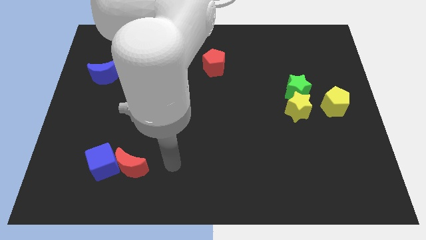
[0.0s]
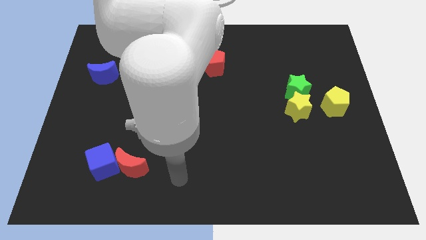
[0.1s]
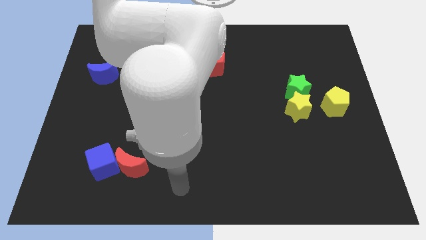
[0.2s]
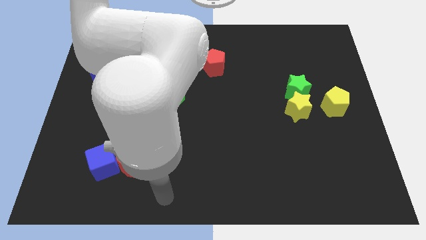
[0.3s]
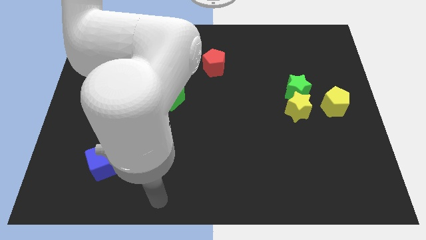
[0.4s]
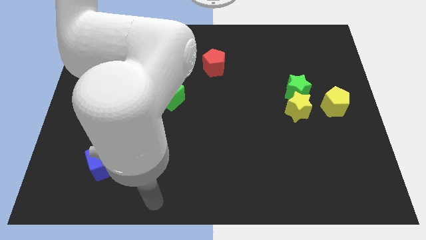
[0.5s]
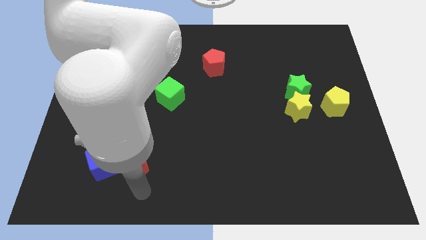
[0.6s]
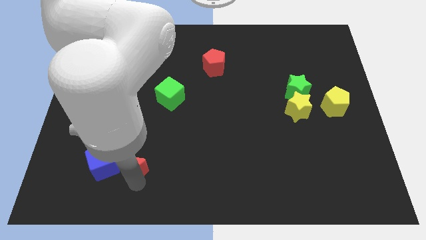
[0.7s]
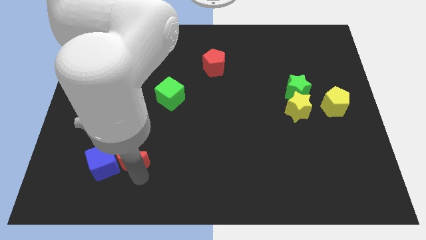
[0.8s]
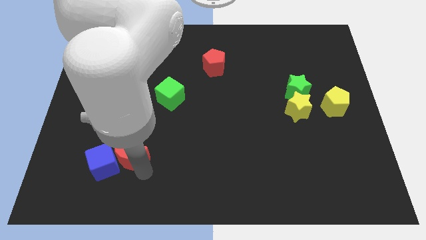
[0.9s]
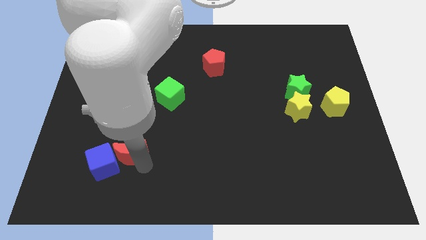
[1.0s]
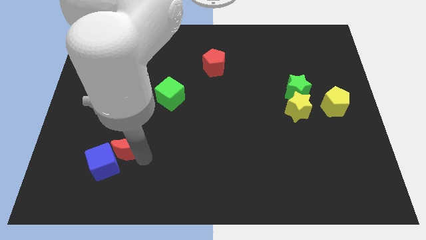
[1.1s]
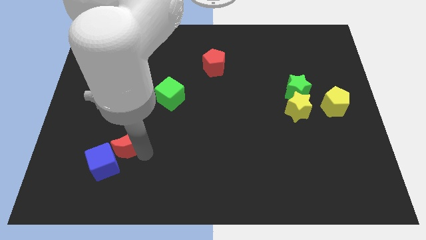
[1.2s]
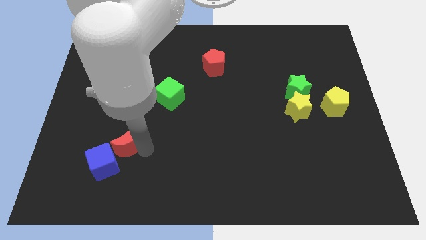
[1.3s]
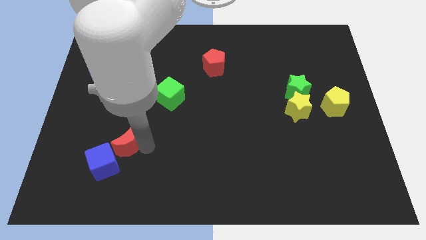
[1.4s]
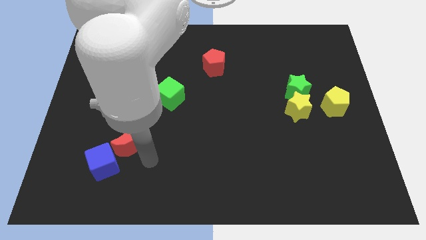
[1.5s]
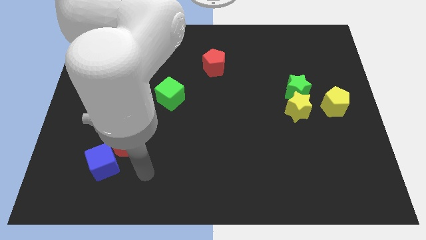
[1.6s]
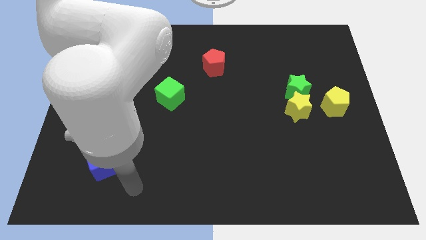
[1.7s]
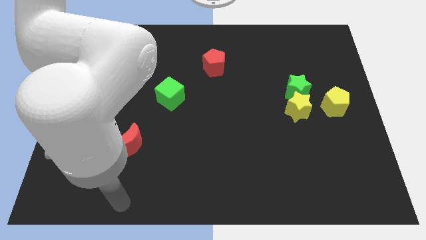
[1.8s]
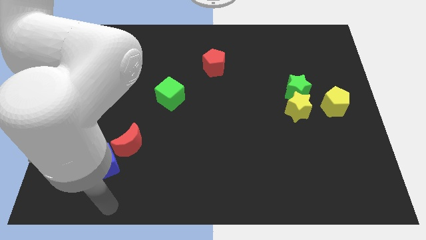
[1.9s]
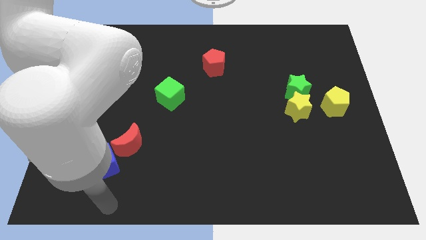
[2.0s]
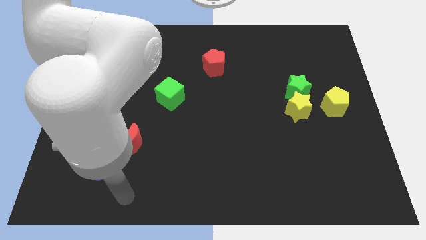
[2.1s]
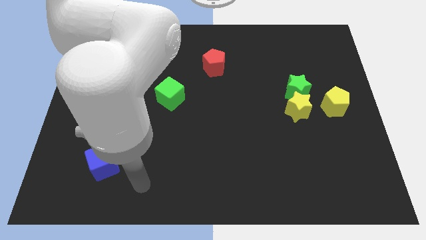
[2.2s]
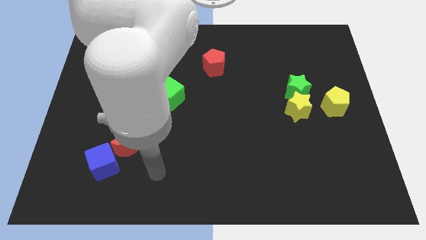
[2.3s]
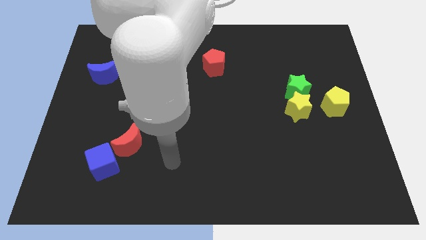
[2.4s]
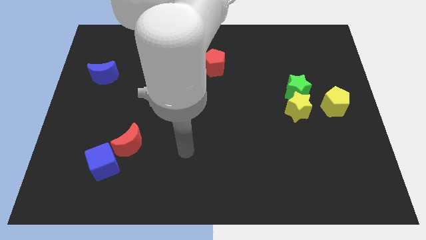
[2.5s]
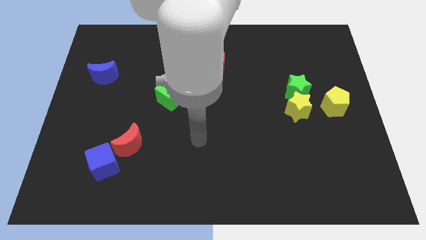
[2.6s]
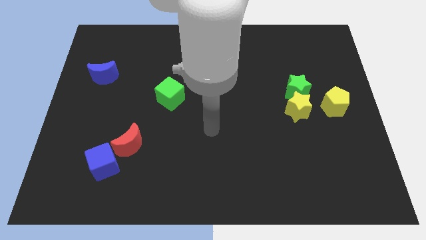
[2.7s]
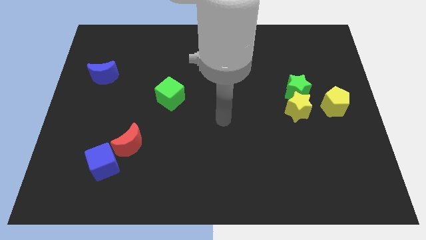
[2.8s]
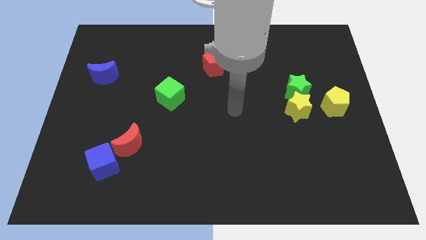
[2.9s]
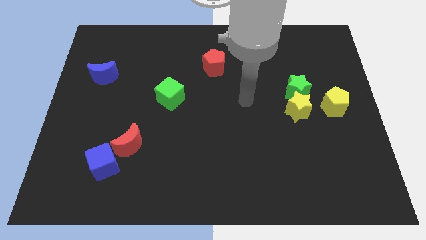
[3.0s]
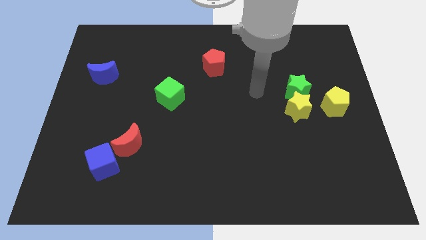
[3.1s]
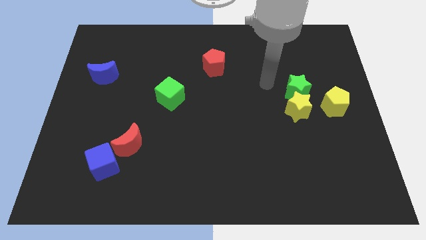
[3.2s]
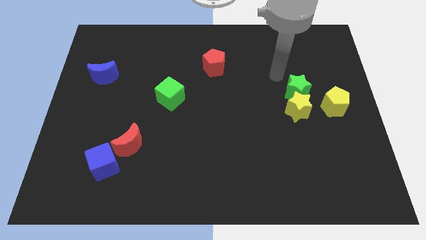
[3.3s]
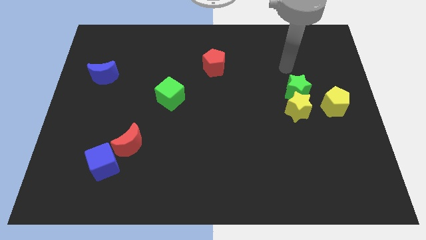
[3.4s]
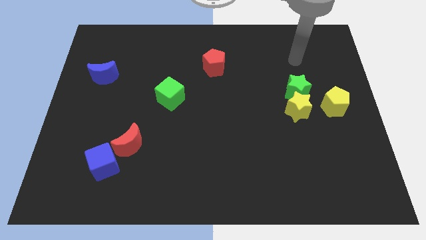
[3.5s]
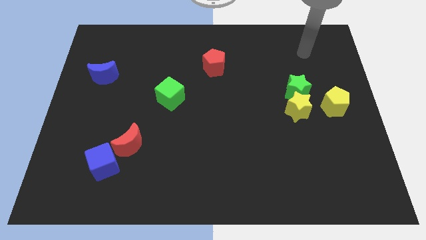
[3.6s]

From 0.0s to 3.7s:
push the red moon up slightly

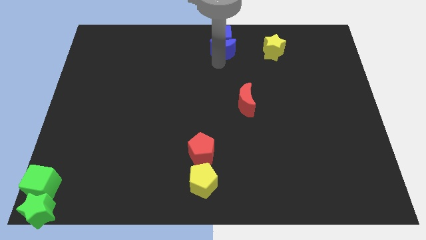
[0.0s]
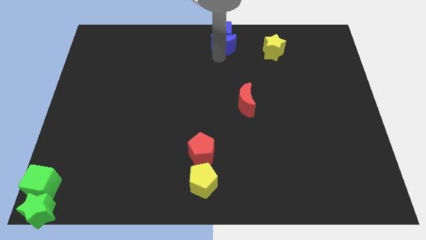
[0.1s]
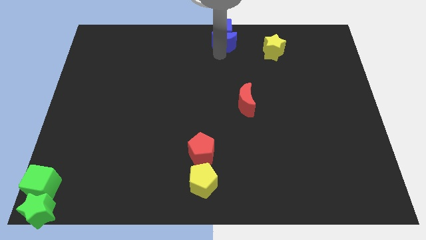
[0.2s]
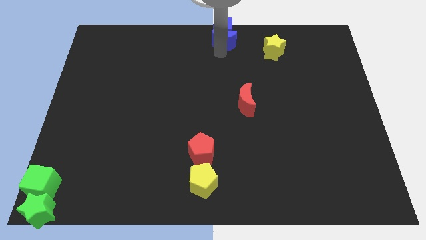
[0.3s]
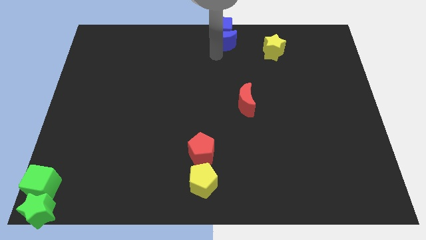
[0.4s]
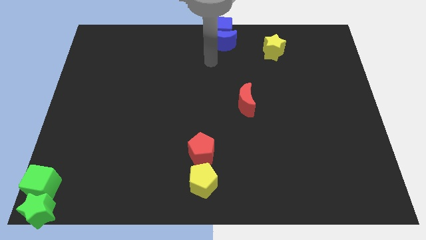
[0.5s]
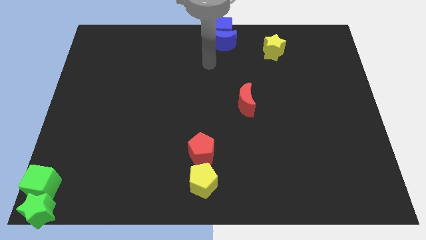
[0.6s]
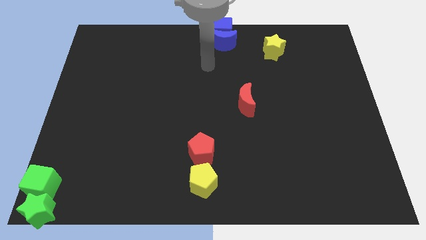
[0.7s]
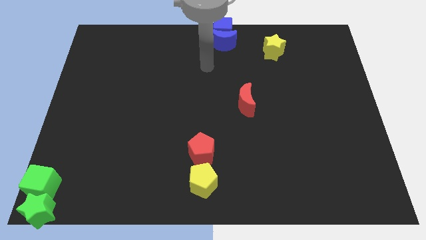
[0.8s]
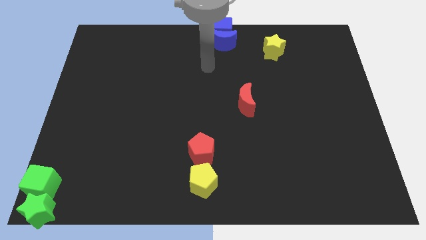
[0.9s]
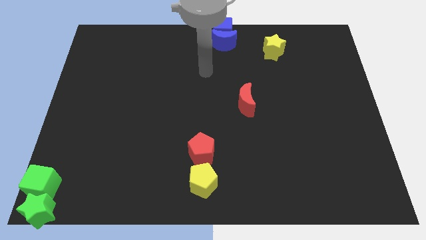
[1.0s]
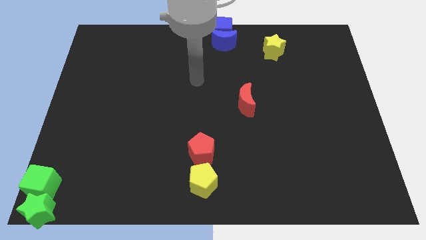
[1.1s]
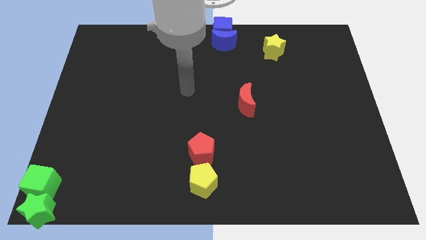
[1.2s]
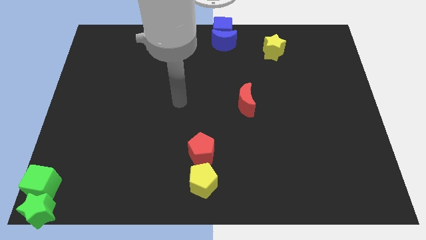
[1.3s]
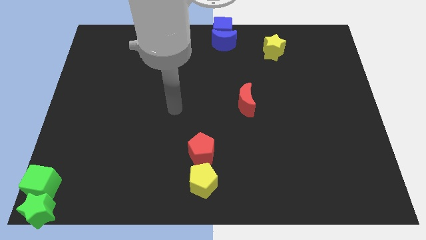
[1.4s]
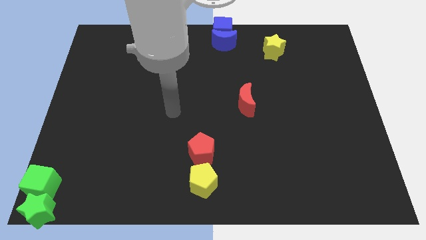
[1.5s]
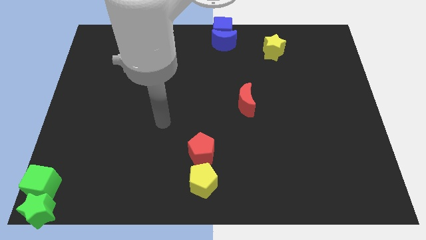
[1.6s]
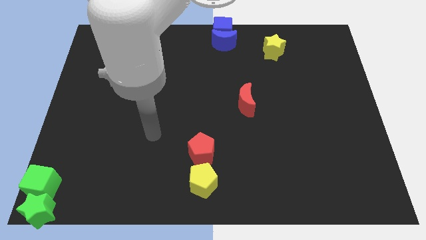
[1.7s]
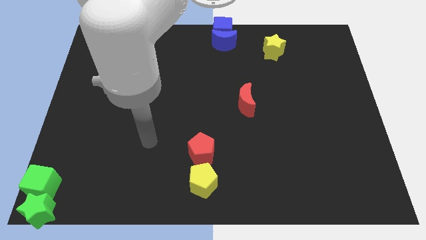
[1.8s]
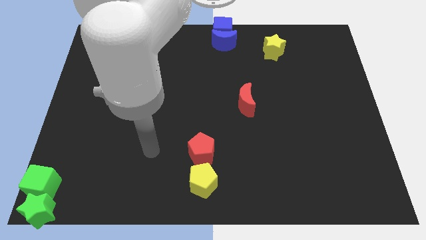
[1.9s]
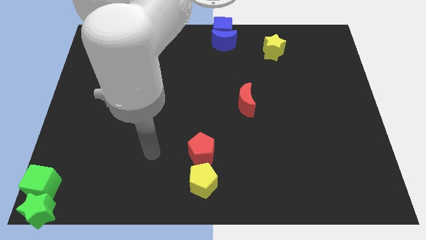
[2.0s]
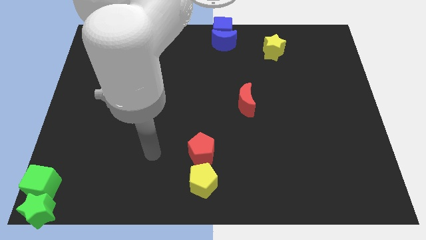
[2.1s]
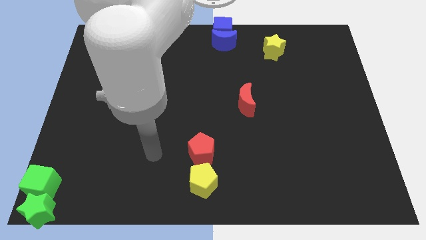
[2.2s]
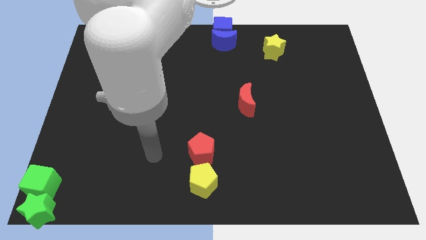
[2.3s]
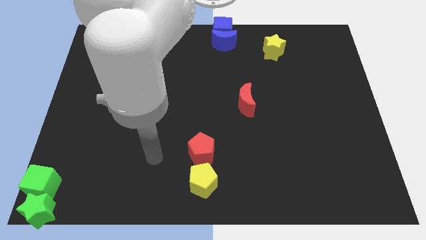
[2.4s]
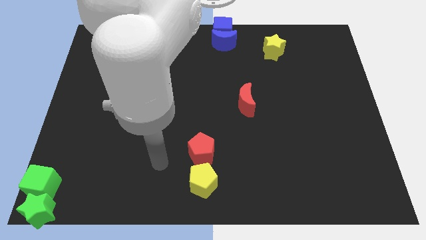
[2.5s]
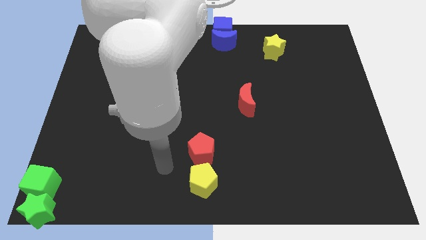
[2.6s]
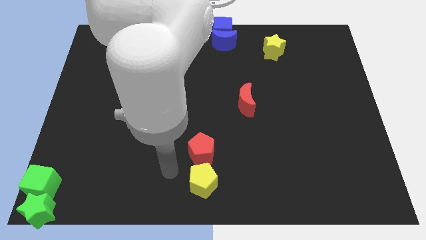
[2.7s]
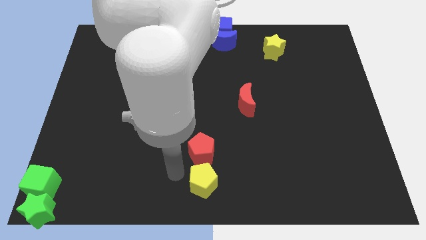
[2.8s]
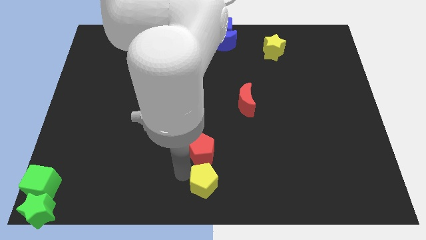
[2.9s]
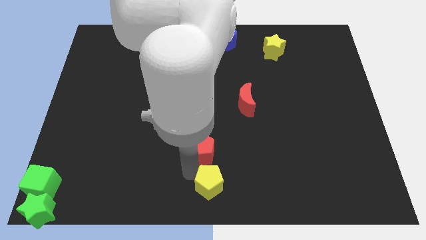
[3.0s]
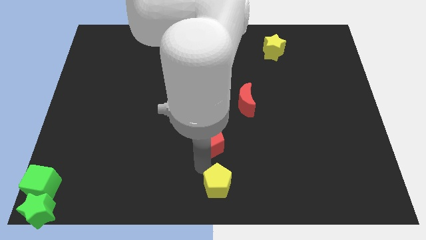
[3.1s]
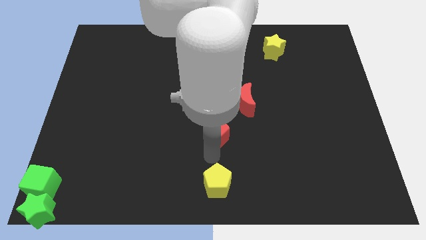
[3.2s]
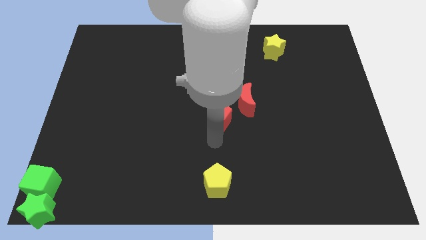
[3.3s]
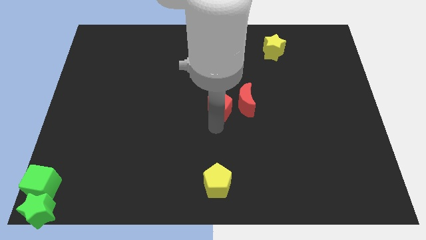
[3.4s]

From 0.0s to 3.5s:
separate red pentagon and yellow pentagon

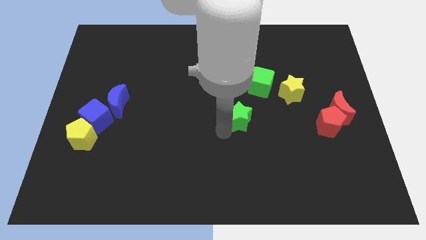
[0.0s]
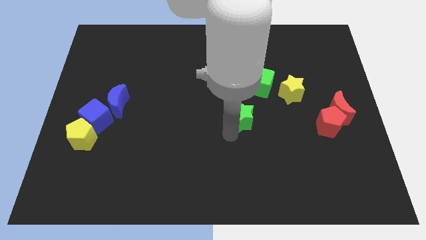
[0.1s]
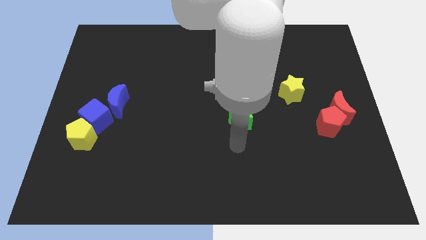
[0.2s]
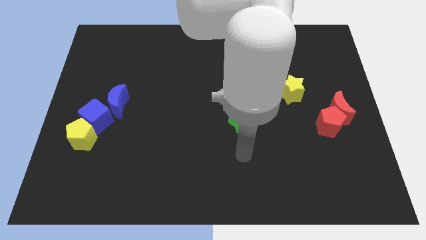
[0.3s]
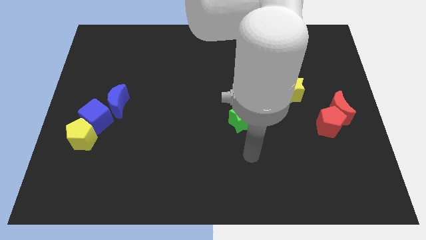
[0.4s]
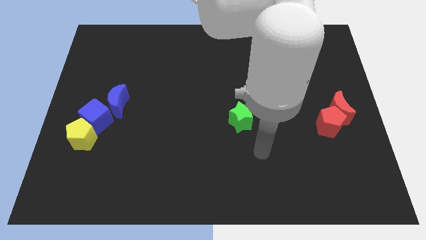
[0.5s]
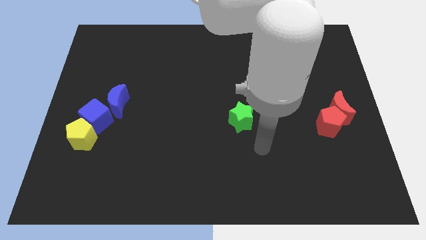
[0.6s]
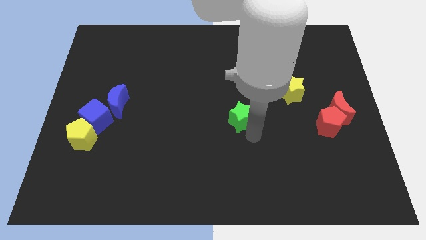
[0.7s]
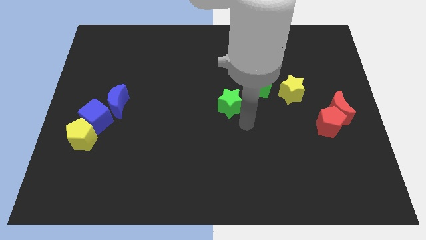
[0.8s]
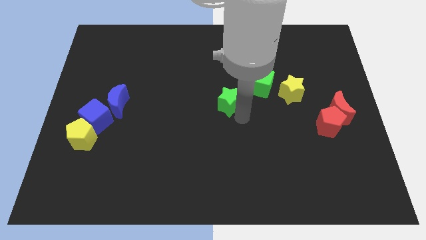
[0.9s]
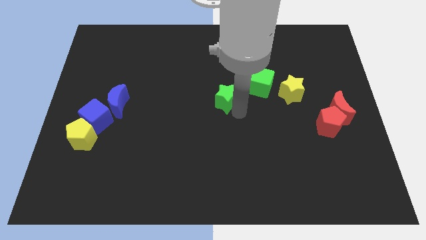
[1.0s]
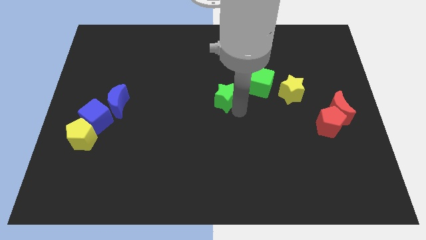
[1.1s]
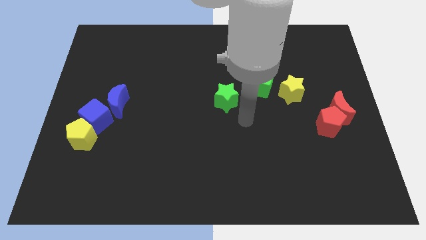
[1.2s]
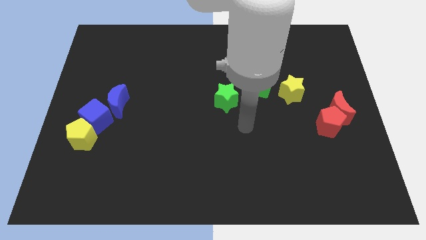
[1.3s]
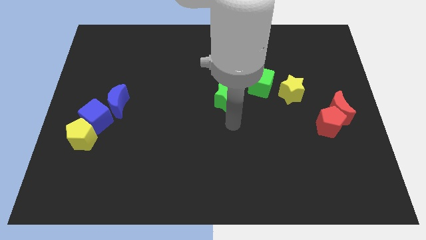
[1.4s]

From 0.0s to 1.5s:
place the green star at the center of the board

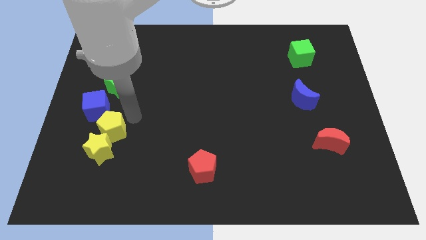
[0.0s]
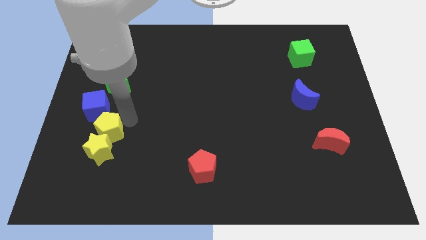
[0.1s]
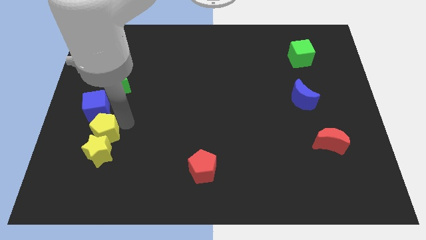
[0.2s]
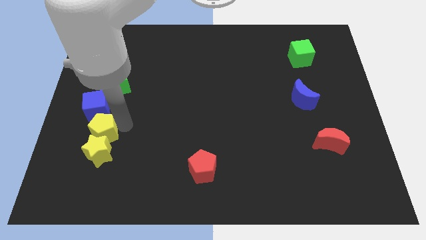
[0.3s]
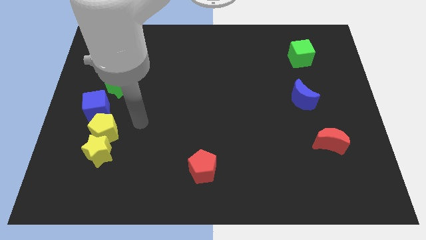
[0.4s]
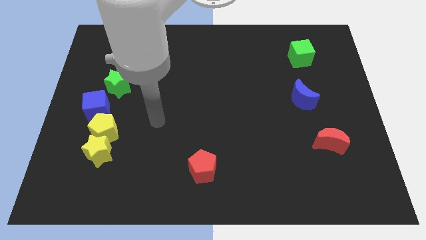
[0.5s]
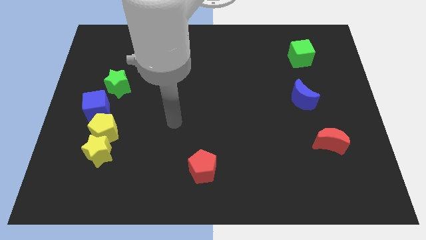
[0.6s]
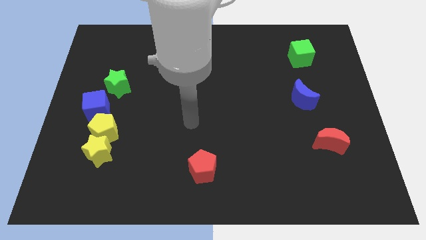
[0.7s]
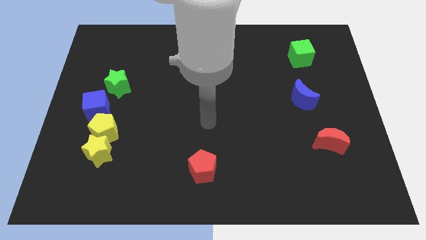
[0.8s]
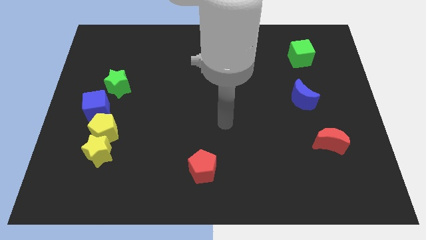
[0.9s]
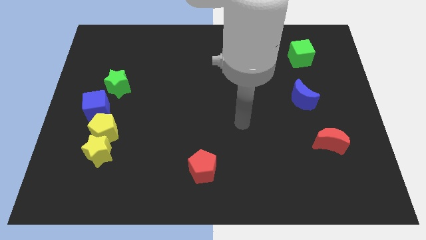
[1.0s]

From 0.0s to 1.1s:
push the yellow pentagon between the blue cube and yellow star
